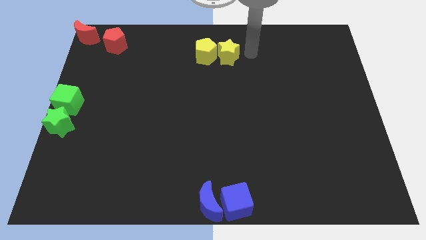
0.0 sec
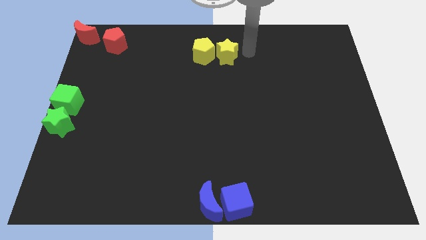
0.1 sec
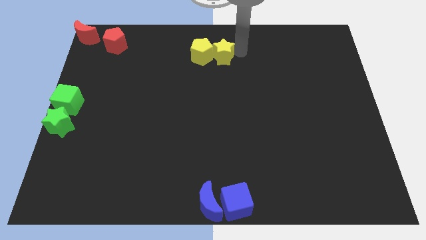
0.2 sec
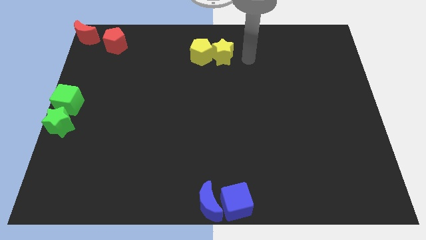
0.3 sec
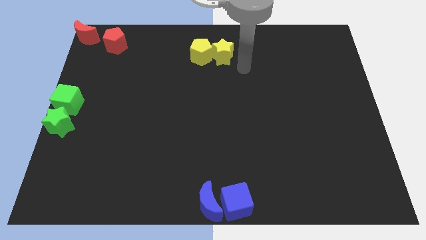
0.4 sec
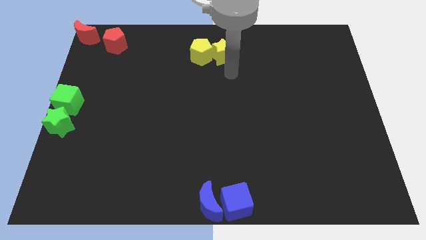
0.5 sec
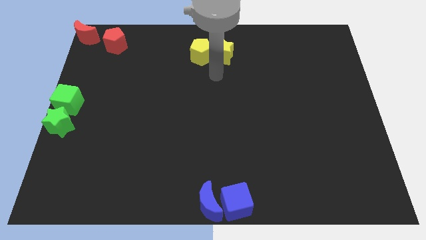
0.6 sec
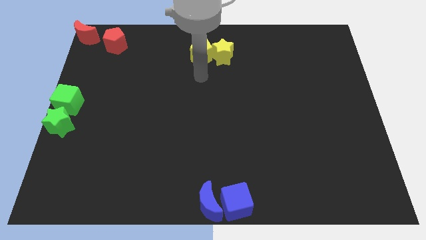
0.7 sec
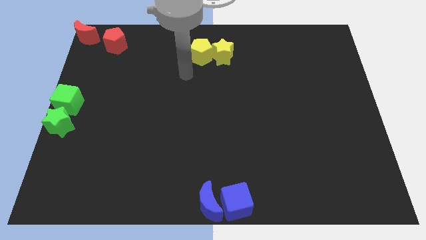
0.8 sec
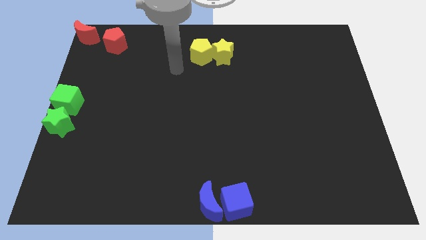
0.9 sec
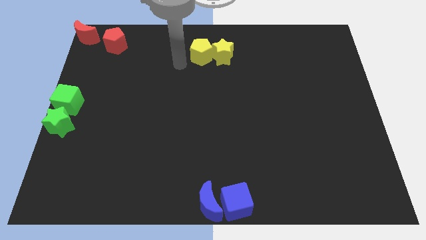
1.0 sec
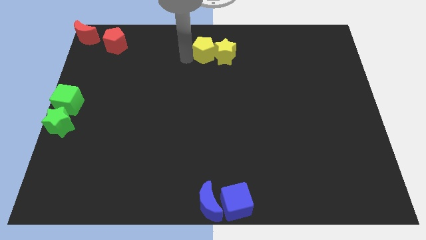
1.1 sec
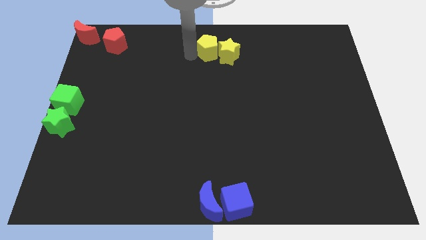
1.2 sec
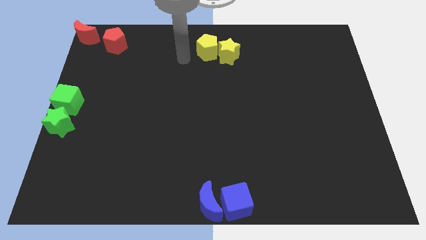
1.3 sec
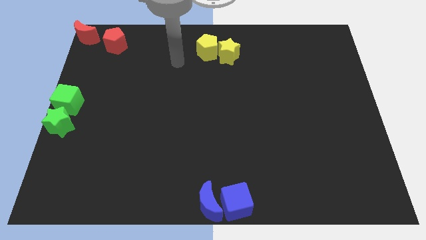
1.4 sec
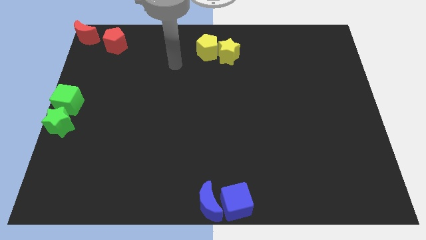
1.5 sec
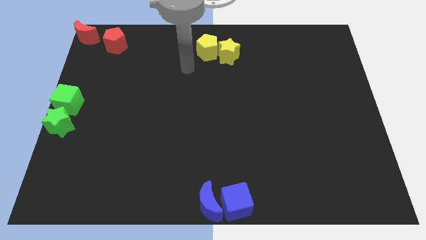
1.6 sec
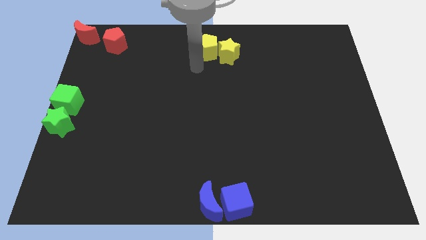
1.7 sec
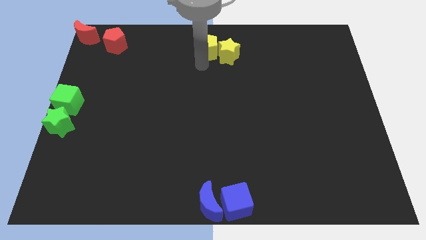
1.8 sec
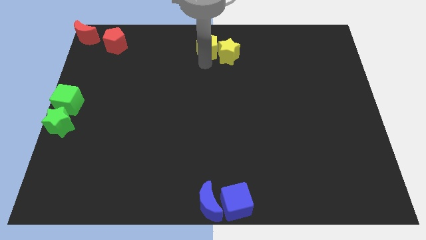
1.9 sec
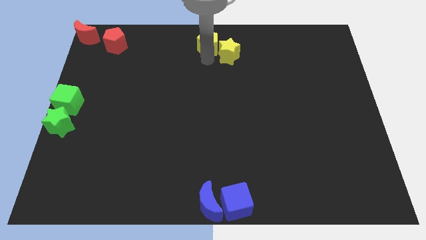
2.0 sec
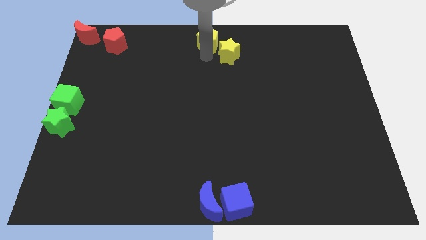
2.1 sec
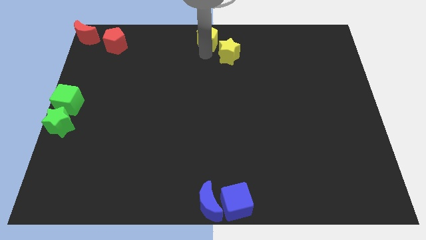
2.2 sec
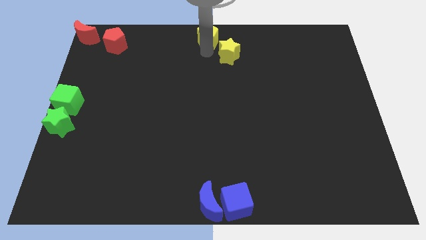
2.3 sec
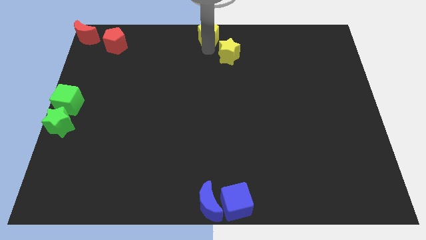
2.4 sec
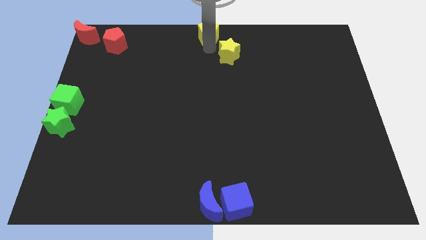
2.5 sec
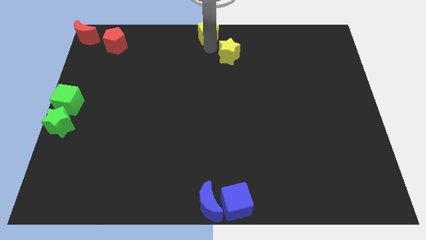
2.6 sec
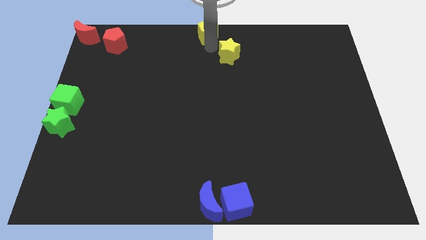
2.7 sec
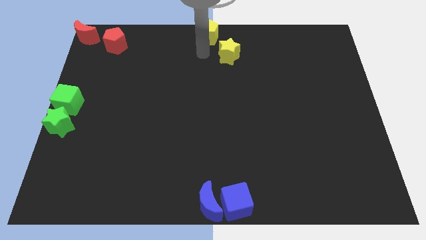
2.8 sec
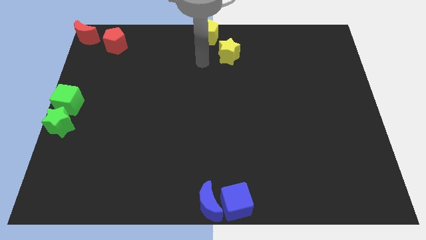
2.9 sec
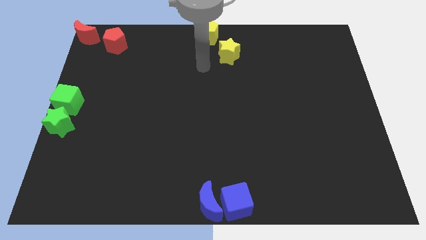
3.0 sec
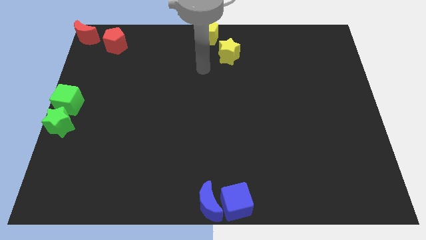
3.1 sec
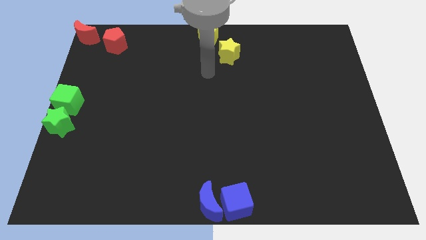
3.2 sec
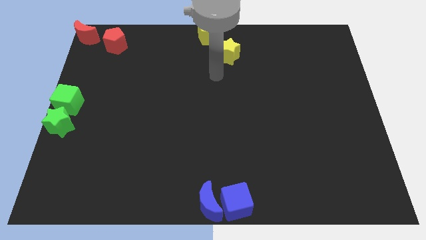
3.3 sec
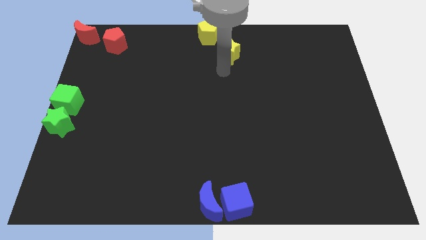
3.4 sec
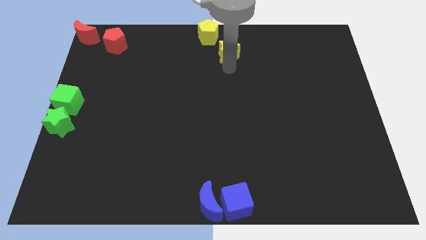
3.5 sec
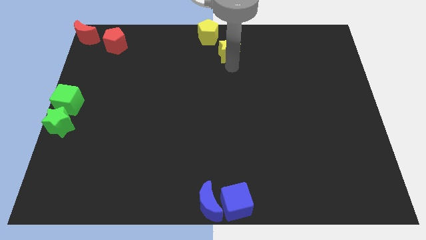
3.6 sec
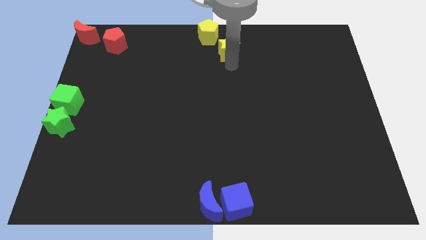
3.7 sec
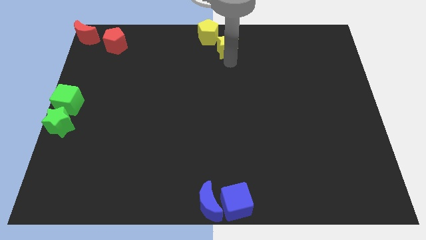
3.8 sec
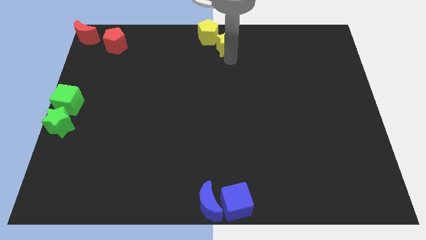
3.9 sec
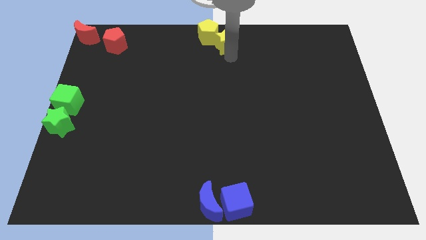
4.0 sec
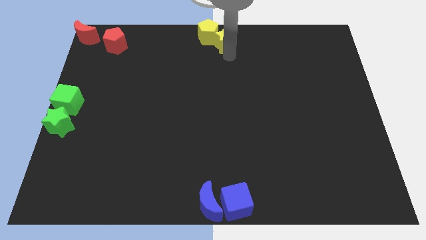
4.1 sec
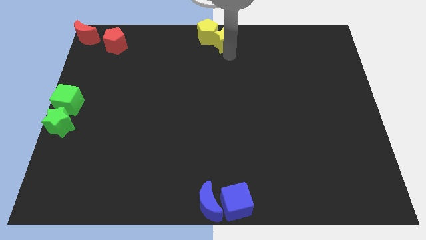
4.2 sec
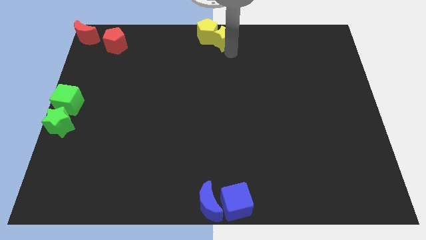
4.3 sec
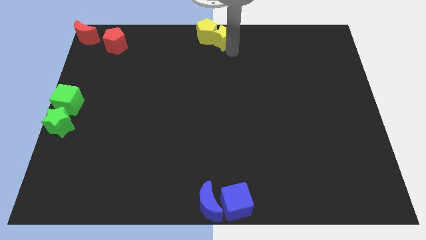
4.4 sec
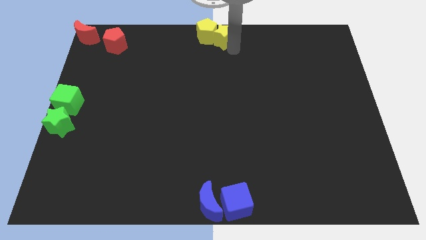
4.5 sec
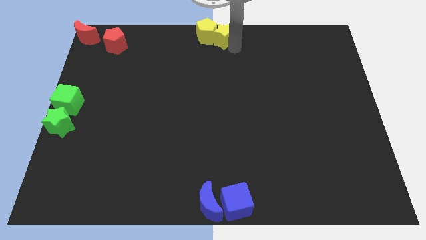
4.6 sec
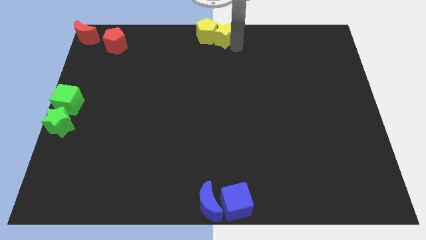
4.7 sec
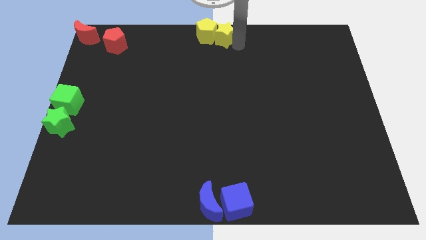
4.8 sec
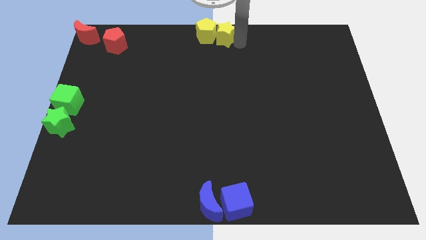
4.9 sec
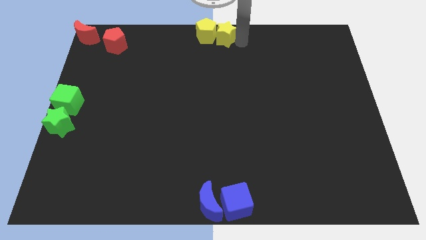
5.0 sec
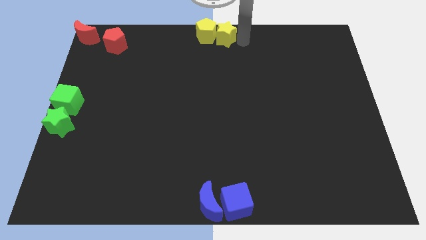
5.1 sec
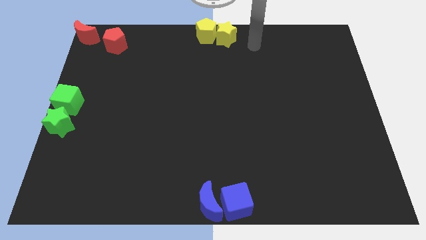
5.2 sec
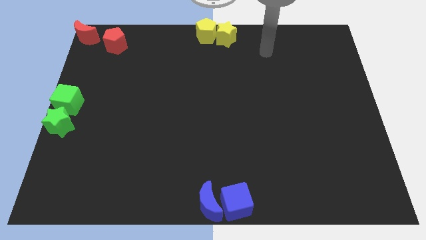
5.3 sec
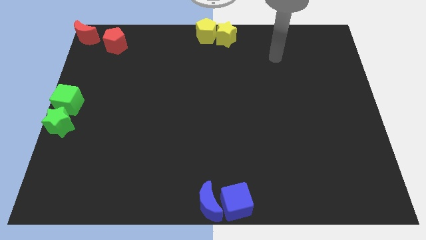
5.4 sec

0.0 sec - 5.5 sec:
move the yellow blocks to the top side of the group of blue blocks

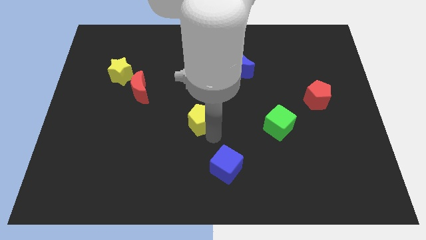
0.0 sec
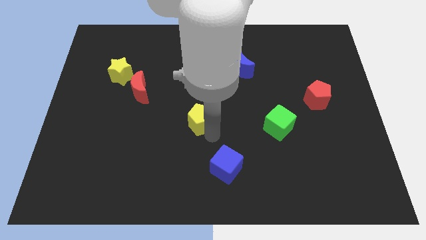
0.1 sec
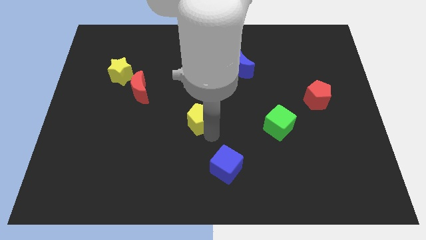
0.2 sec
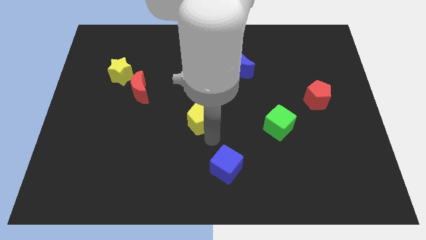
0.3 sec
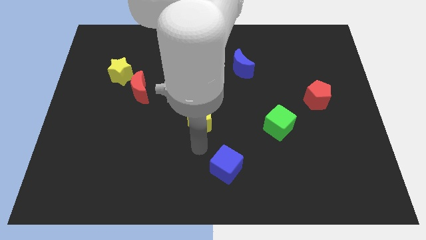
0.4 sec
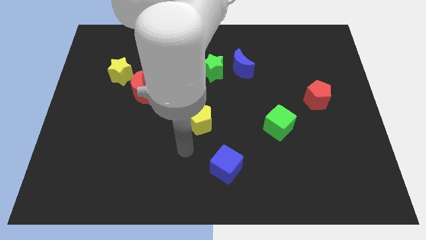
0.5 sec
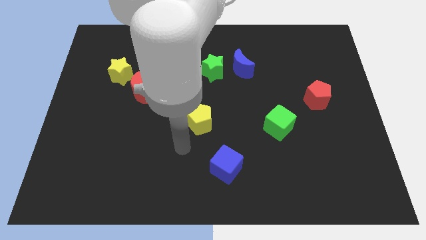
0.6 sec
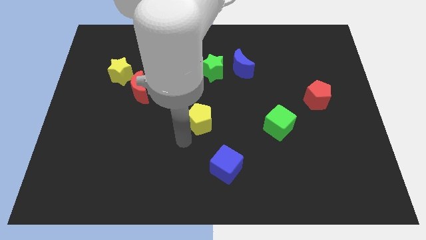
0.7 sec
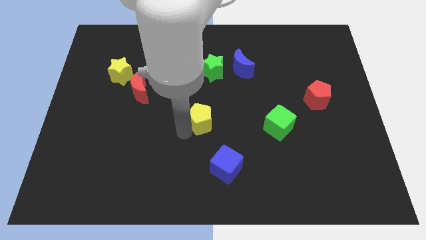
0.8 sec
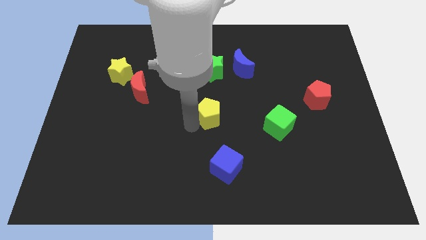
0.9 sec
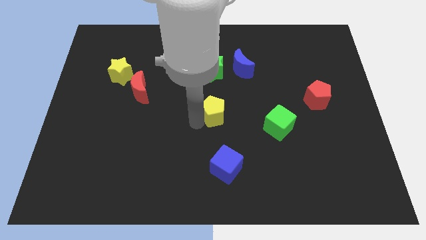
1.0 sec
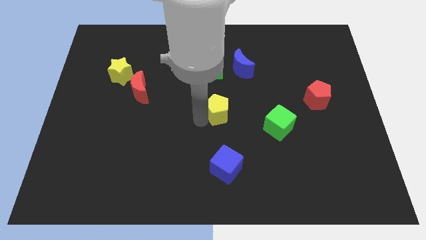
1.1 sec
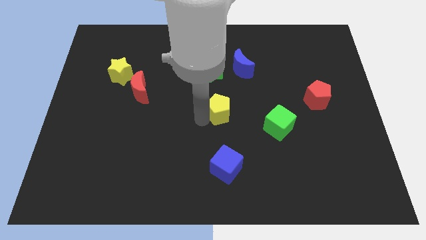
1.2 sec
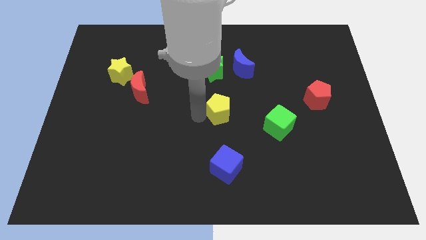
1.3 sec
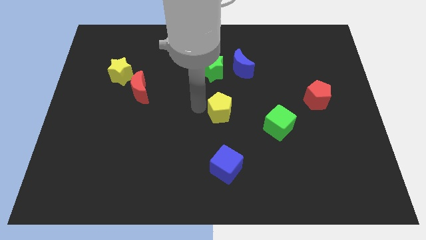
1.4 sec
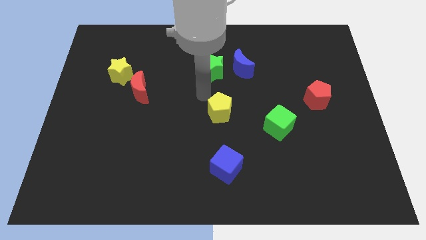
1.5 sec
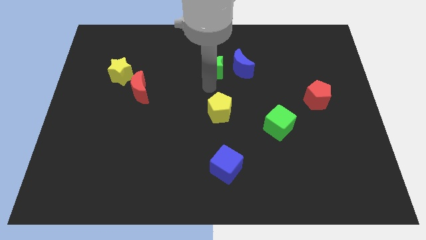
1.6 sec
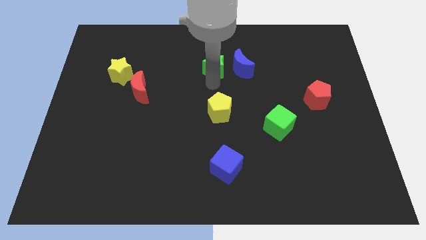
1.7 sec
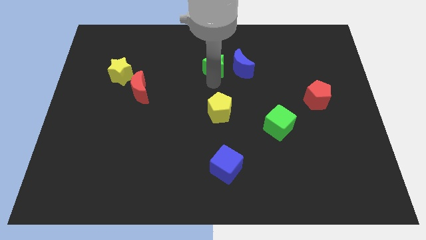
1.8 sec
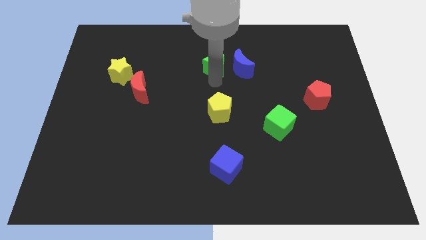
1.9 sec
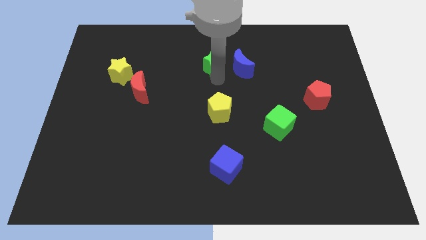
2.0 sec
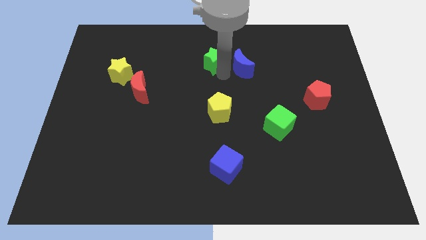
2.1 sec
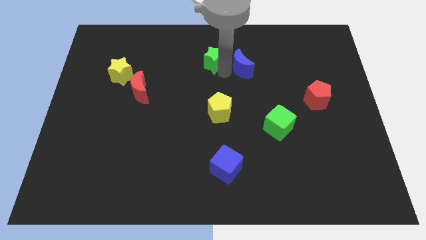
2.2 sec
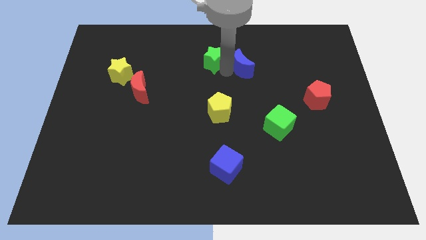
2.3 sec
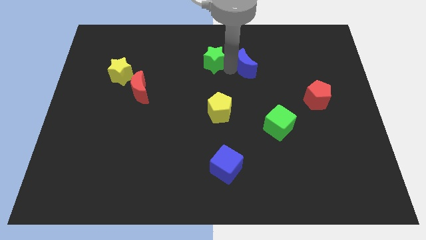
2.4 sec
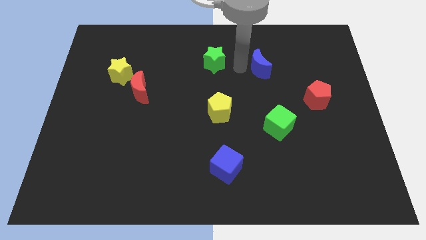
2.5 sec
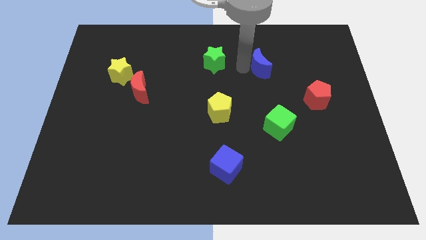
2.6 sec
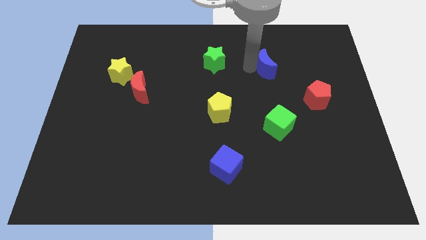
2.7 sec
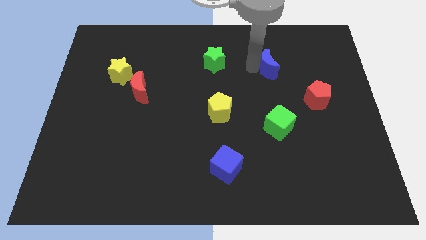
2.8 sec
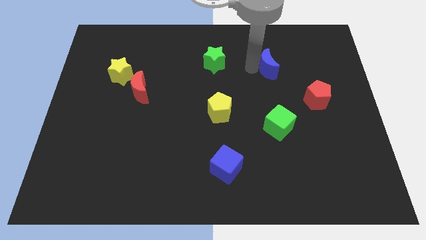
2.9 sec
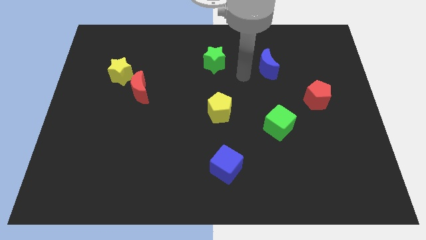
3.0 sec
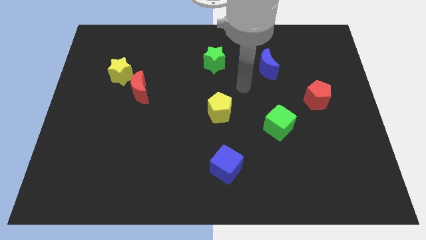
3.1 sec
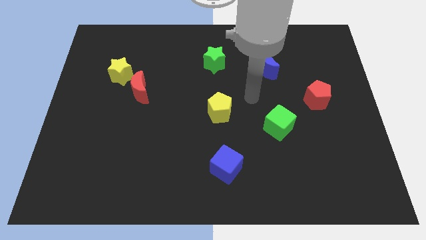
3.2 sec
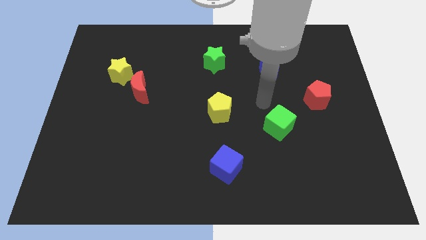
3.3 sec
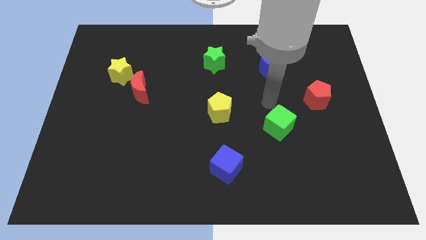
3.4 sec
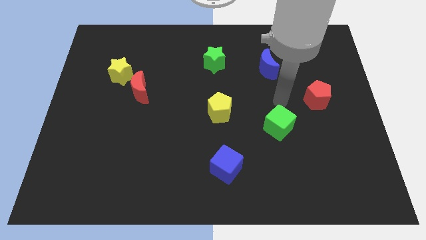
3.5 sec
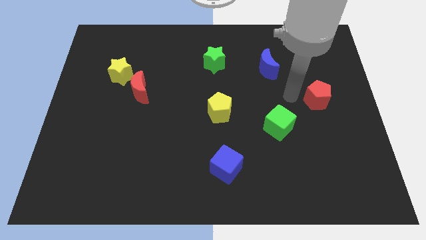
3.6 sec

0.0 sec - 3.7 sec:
push the yellow pentagon green star and blue crescent slightly to the right side of the board
